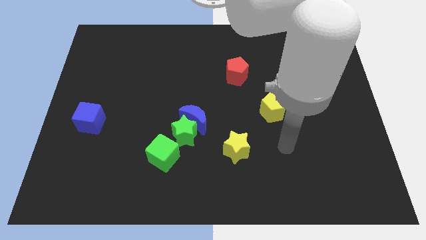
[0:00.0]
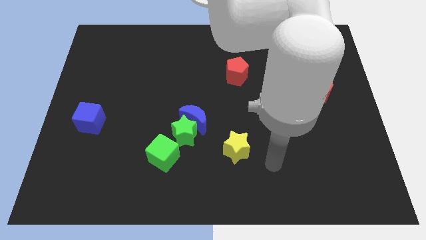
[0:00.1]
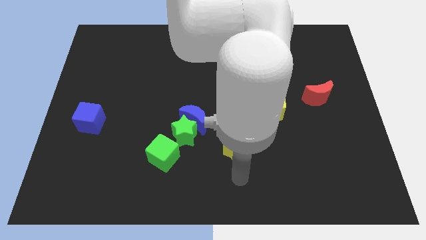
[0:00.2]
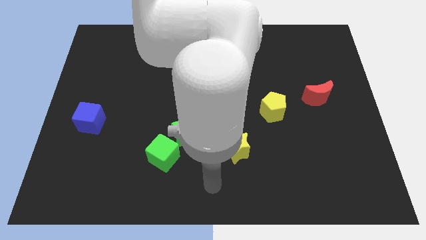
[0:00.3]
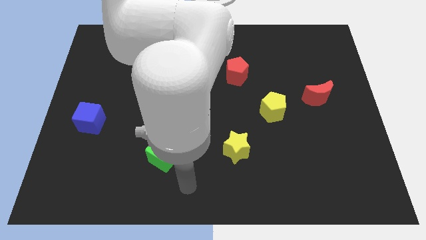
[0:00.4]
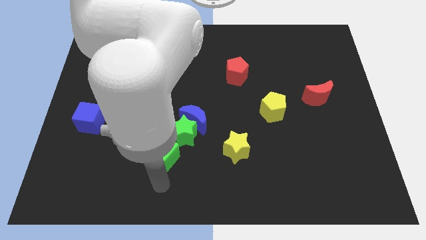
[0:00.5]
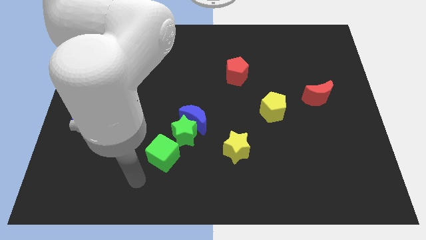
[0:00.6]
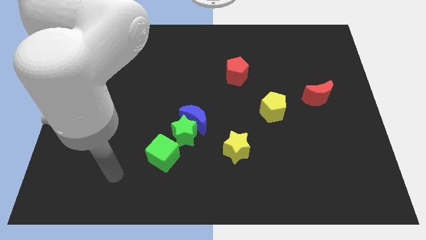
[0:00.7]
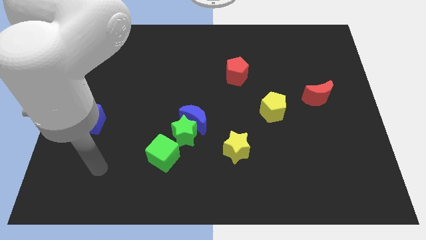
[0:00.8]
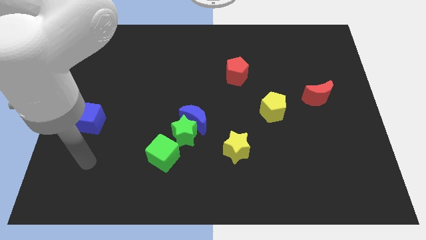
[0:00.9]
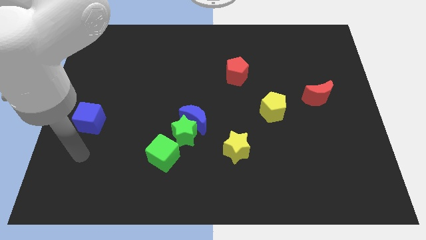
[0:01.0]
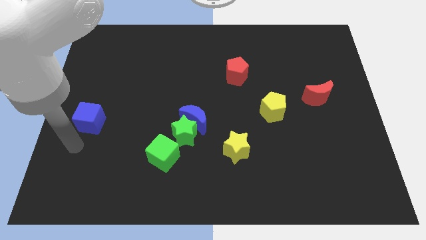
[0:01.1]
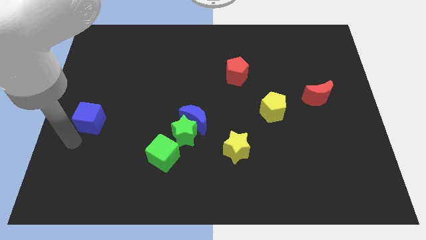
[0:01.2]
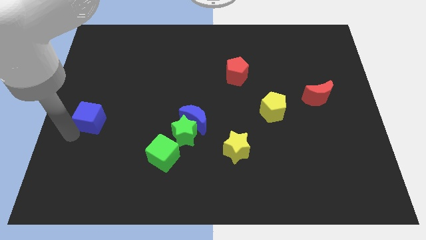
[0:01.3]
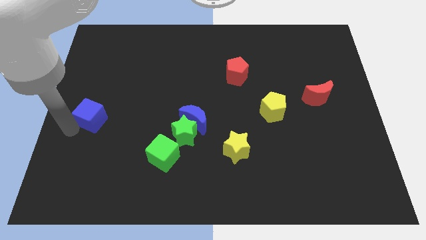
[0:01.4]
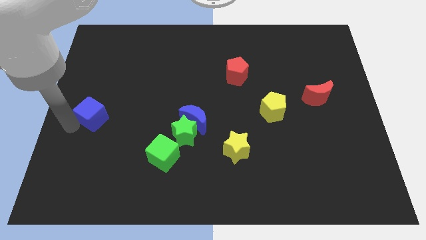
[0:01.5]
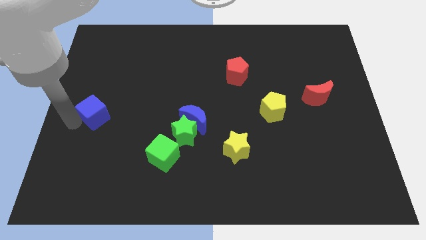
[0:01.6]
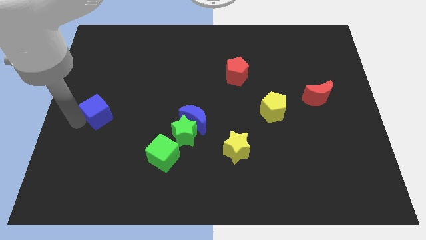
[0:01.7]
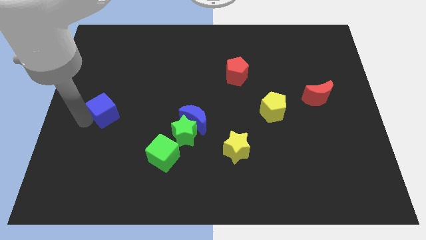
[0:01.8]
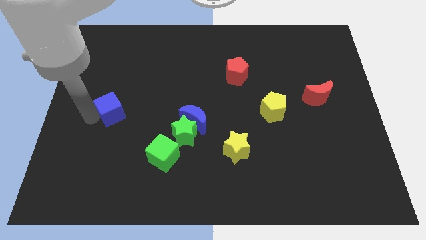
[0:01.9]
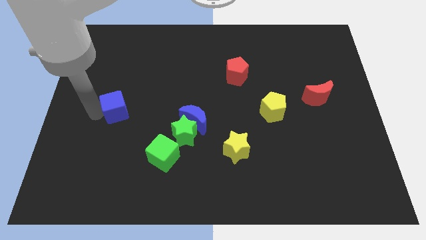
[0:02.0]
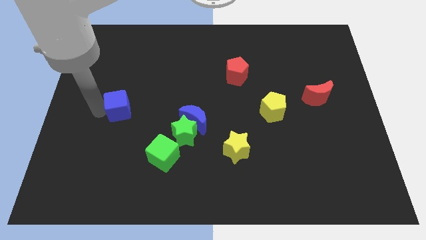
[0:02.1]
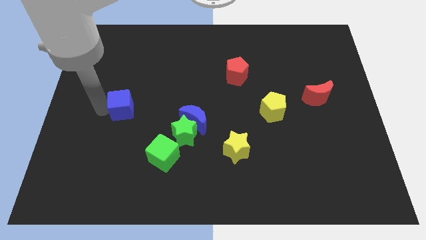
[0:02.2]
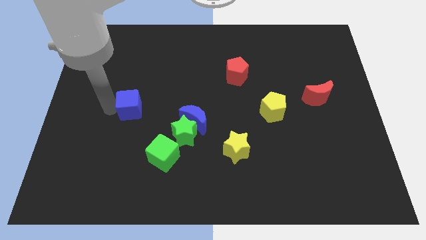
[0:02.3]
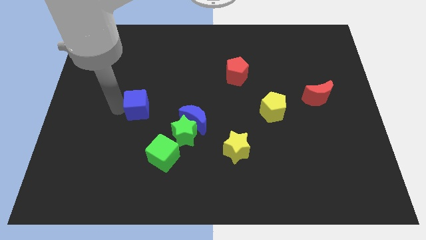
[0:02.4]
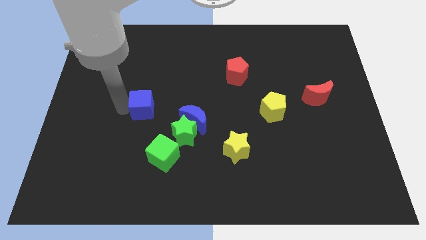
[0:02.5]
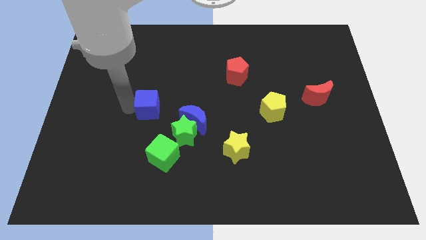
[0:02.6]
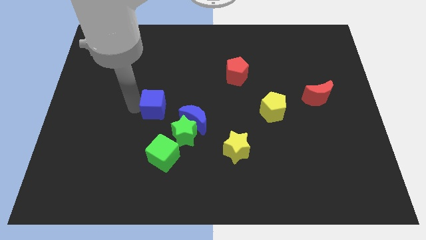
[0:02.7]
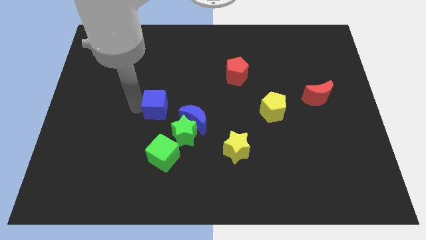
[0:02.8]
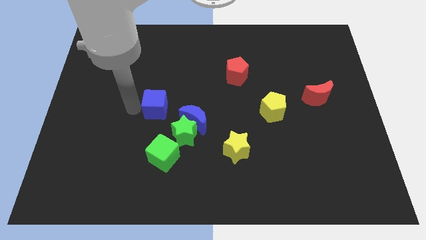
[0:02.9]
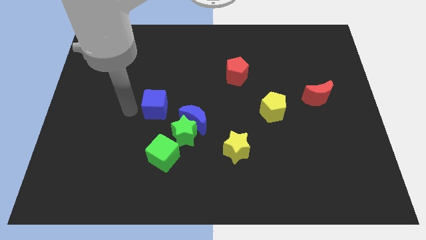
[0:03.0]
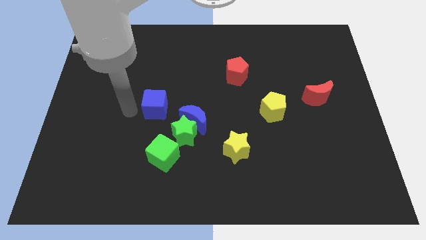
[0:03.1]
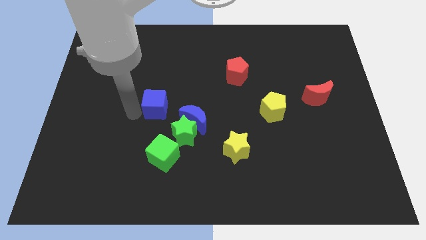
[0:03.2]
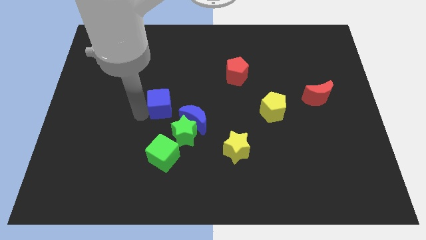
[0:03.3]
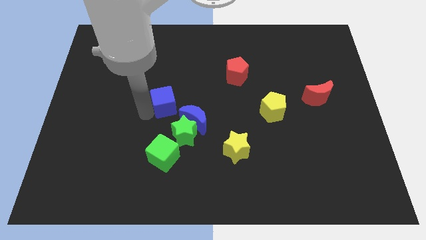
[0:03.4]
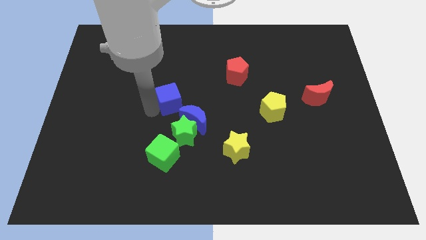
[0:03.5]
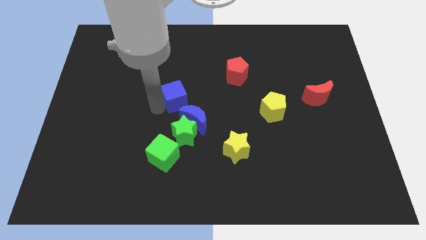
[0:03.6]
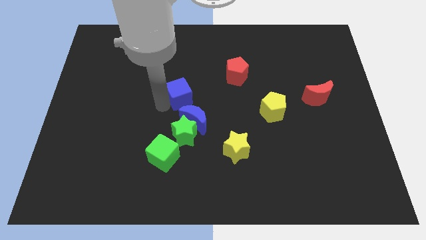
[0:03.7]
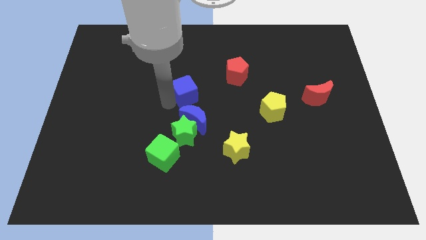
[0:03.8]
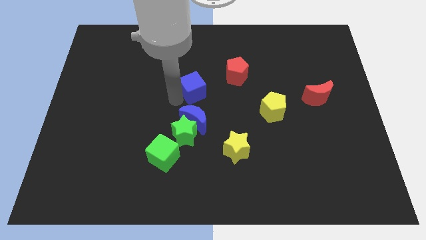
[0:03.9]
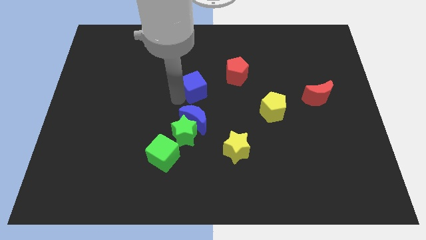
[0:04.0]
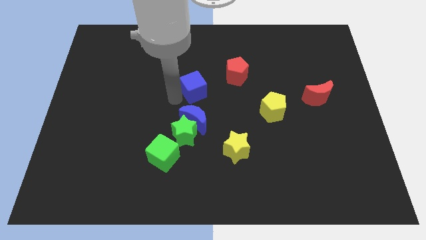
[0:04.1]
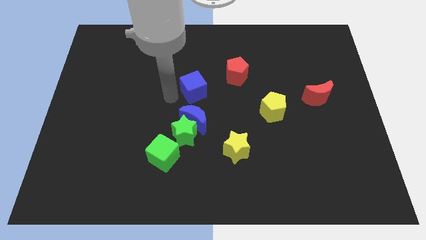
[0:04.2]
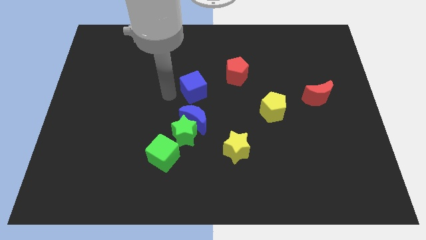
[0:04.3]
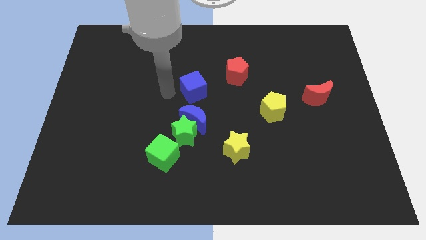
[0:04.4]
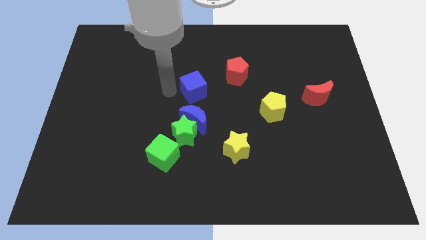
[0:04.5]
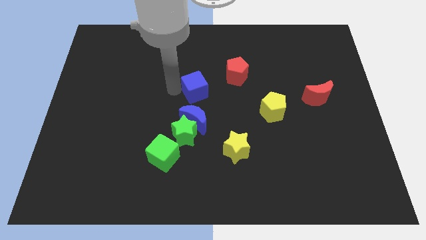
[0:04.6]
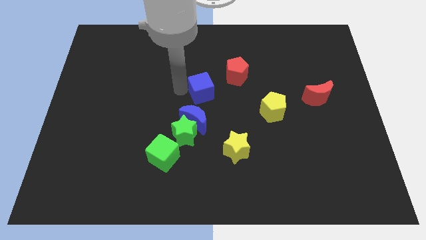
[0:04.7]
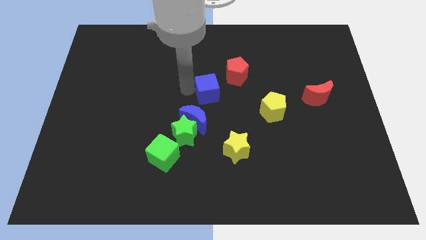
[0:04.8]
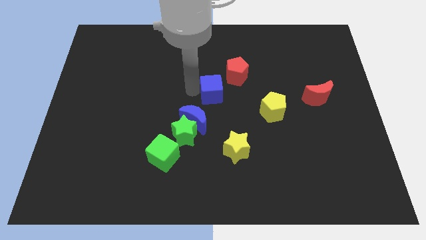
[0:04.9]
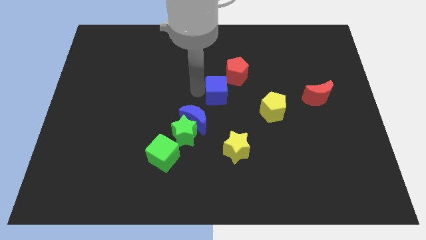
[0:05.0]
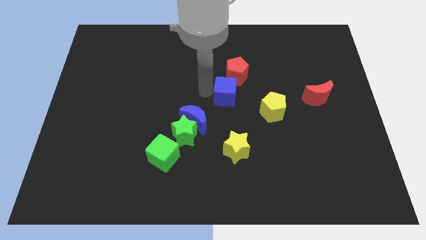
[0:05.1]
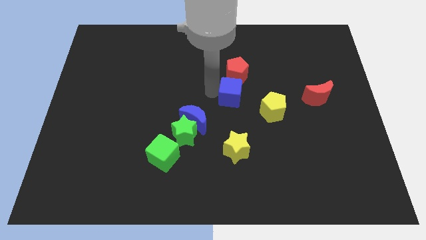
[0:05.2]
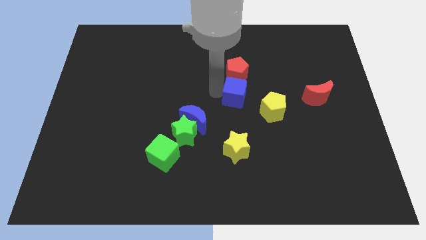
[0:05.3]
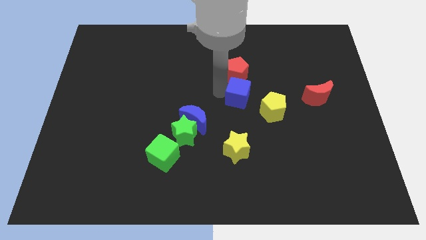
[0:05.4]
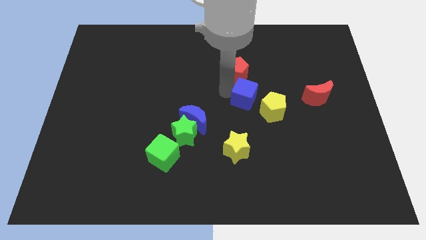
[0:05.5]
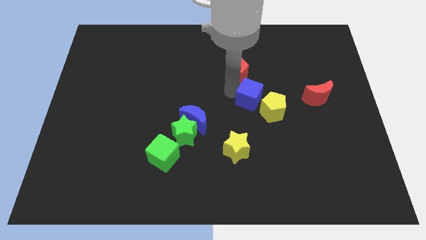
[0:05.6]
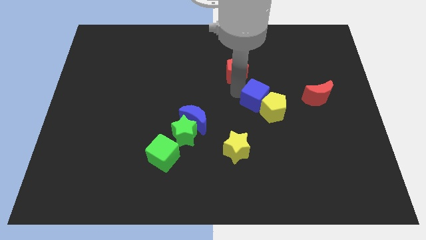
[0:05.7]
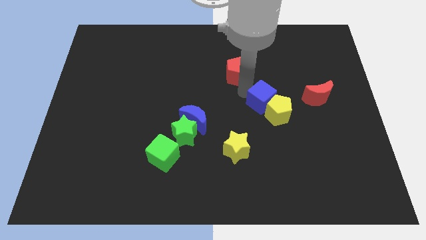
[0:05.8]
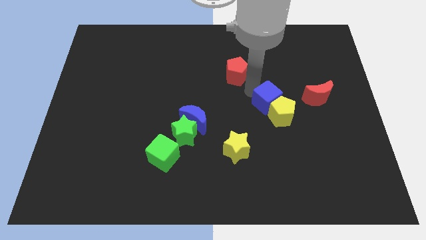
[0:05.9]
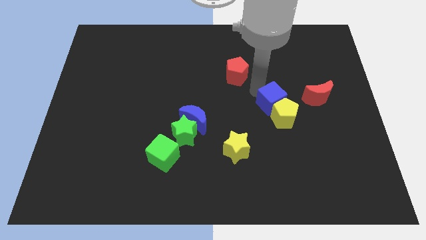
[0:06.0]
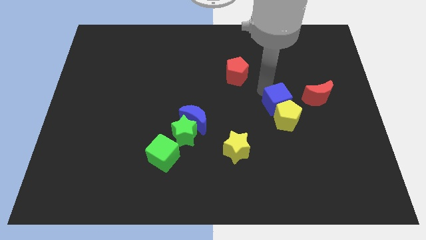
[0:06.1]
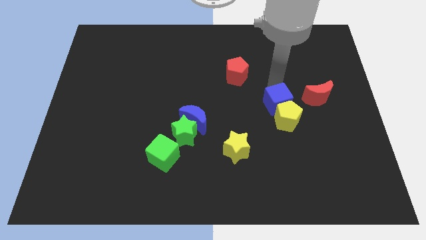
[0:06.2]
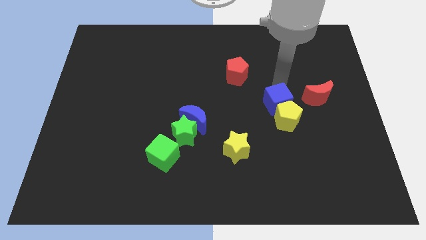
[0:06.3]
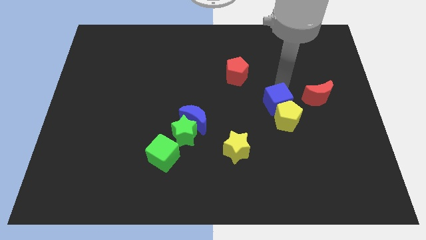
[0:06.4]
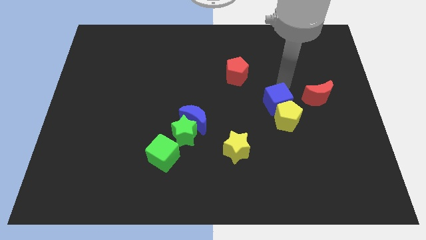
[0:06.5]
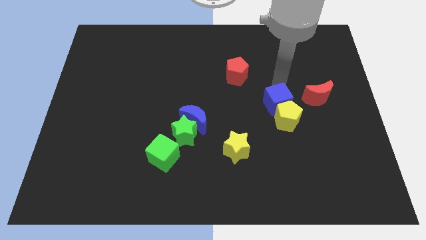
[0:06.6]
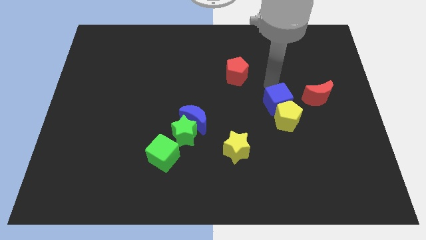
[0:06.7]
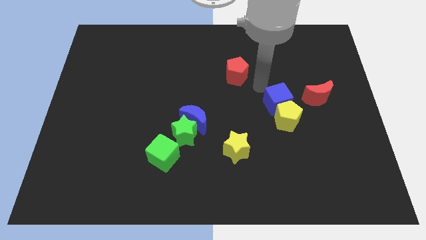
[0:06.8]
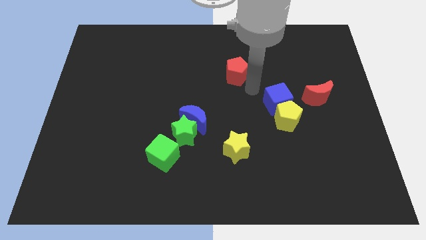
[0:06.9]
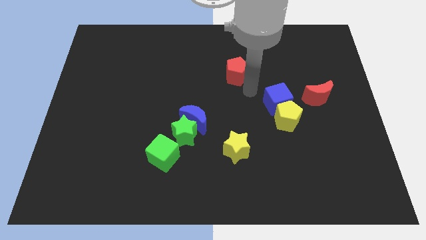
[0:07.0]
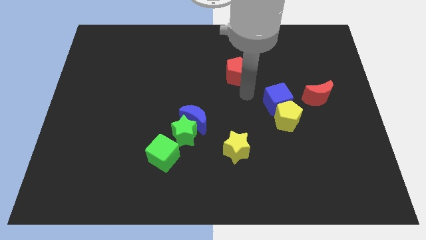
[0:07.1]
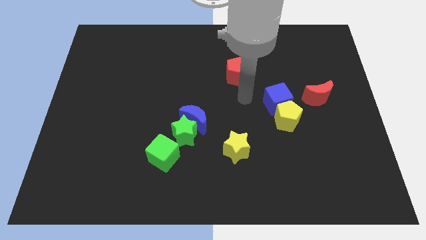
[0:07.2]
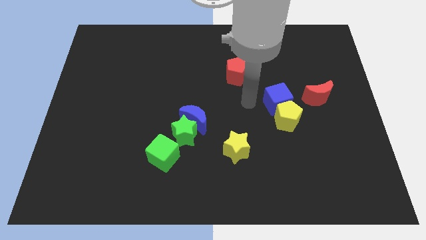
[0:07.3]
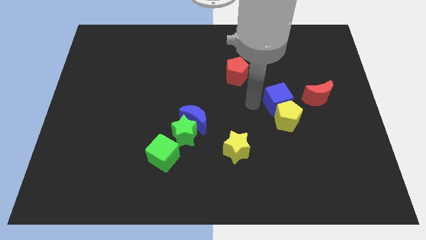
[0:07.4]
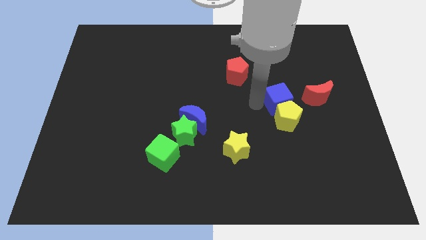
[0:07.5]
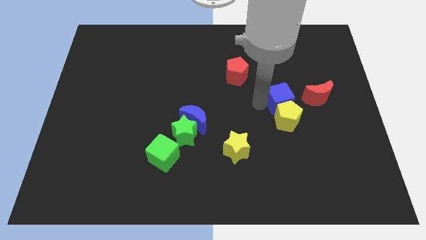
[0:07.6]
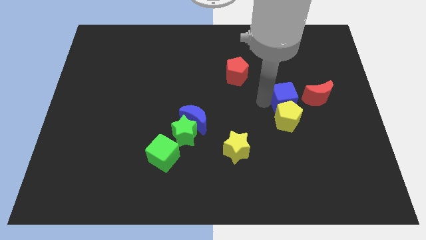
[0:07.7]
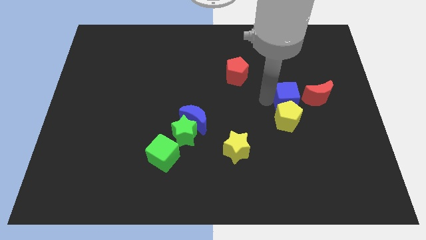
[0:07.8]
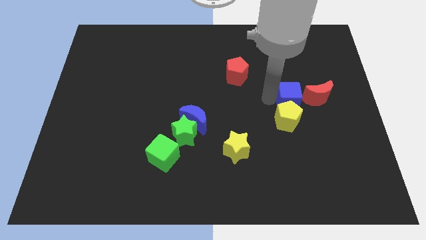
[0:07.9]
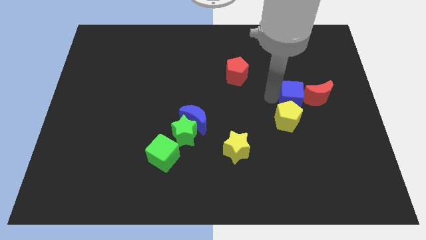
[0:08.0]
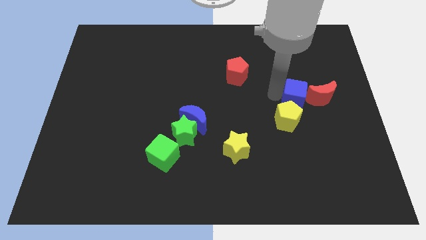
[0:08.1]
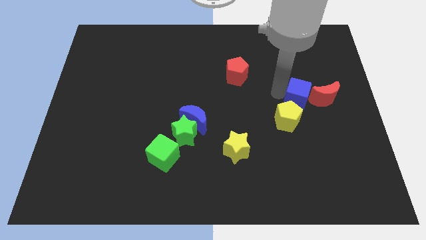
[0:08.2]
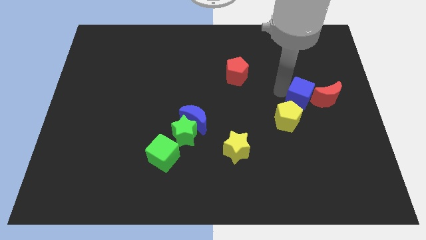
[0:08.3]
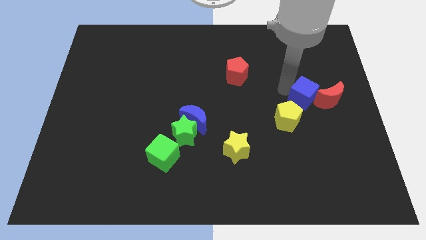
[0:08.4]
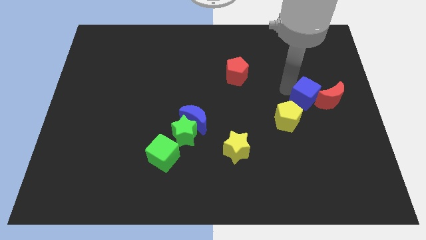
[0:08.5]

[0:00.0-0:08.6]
push the blue cube next to the red moon
